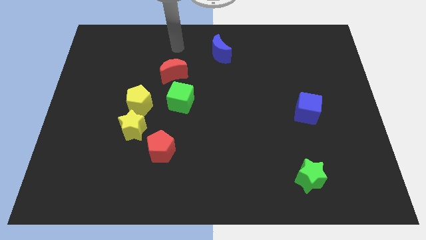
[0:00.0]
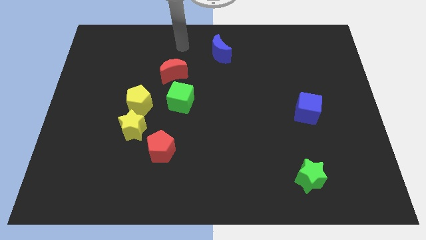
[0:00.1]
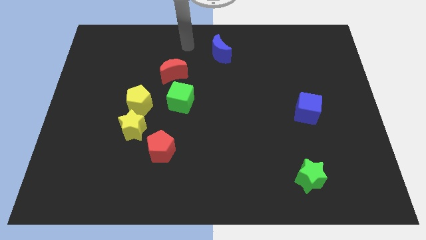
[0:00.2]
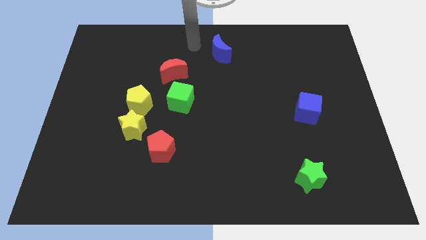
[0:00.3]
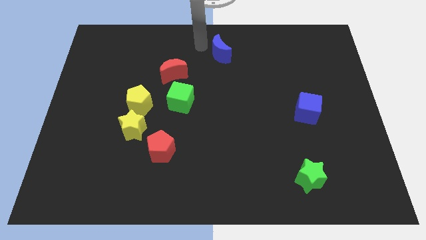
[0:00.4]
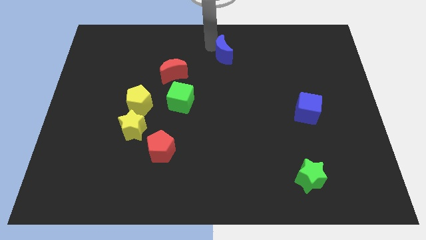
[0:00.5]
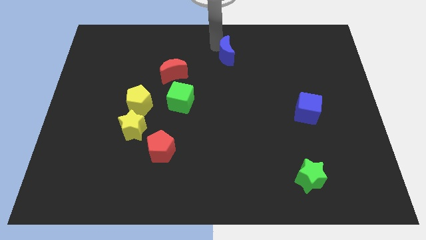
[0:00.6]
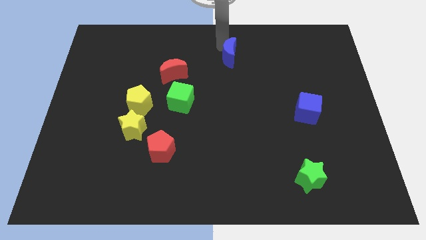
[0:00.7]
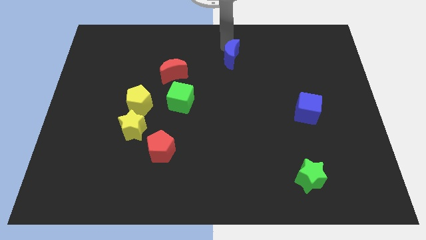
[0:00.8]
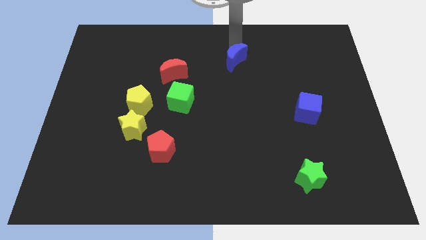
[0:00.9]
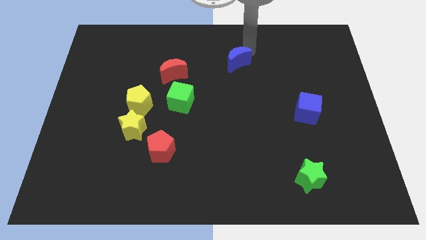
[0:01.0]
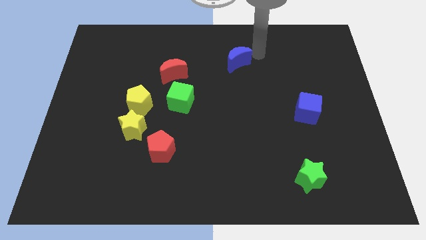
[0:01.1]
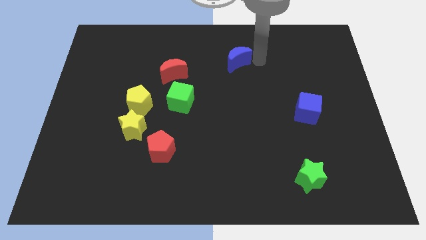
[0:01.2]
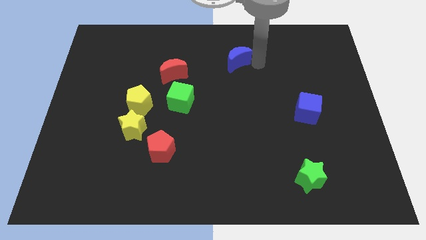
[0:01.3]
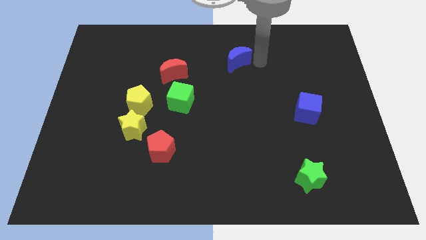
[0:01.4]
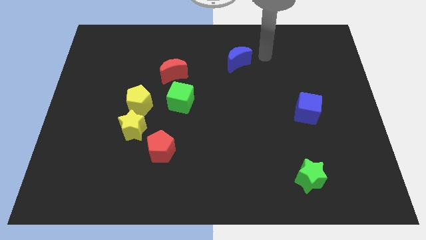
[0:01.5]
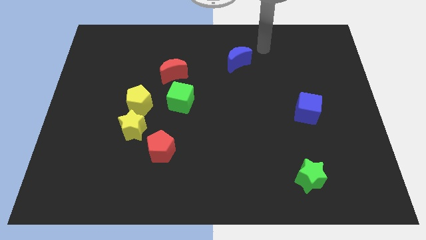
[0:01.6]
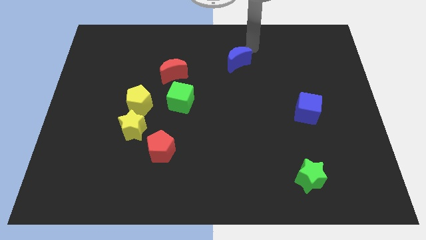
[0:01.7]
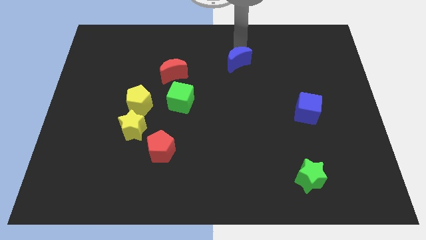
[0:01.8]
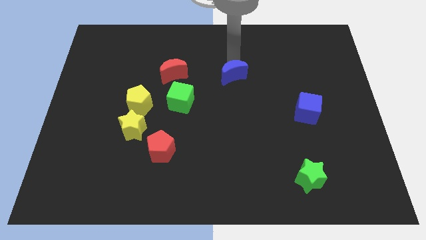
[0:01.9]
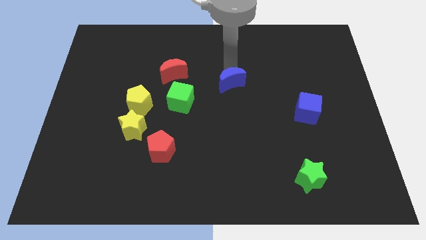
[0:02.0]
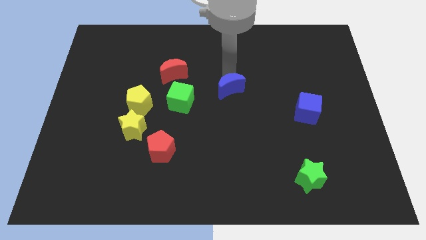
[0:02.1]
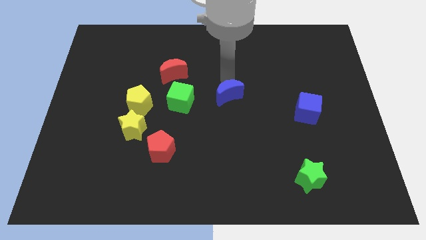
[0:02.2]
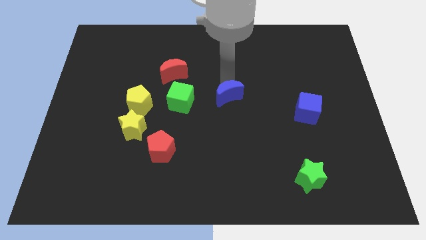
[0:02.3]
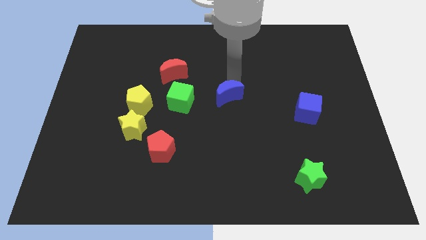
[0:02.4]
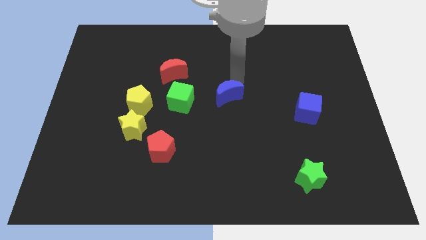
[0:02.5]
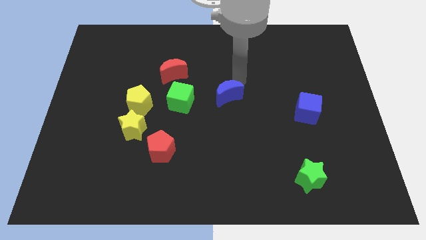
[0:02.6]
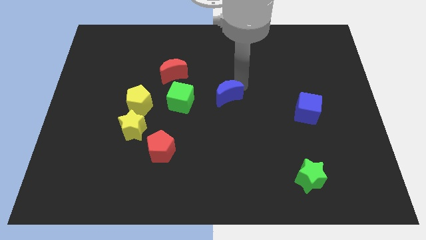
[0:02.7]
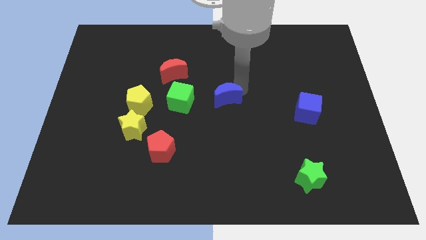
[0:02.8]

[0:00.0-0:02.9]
push the blue moon to the right side of the green cube

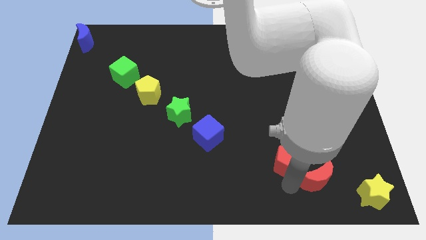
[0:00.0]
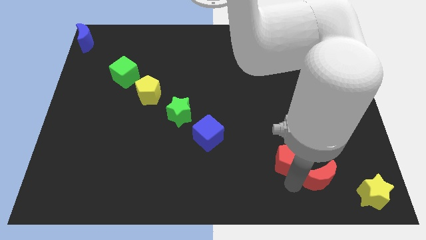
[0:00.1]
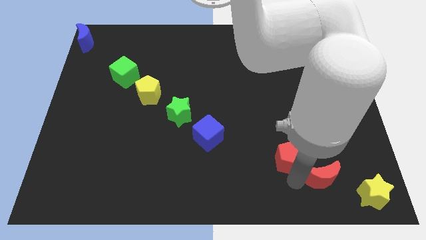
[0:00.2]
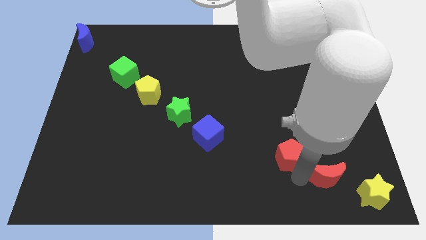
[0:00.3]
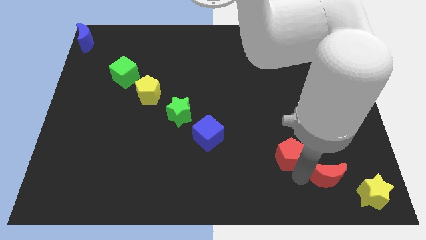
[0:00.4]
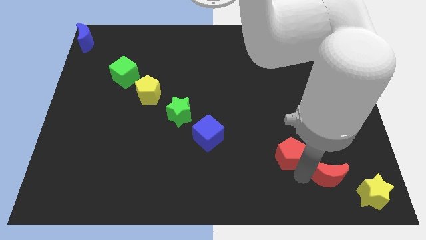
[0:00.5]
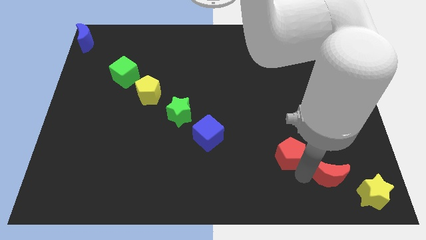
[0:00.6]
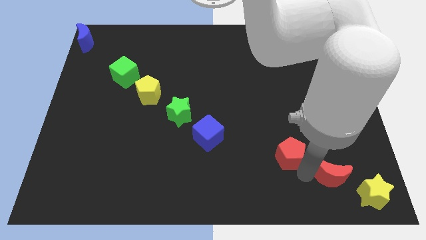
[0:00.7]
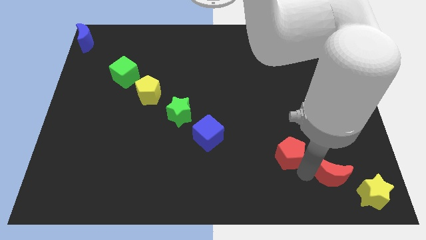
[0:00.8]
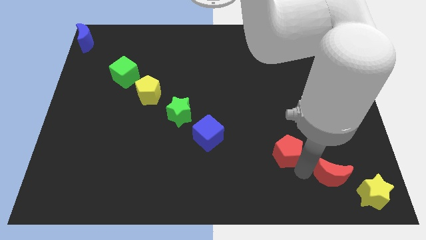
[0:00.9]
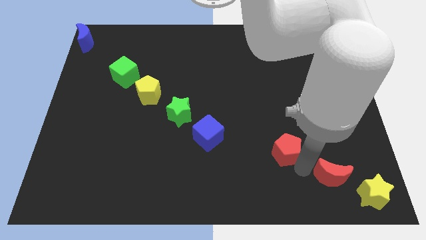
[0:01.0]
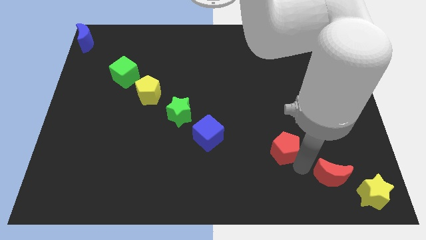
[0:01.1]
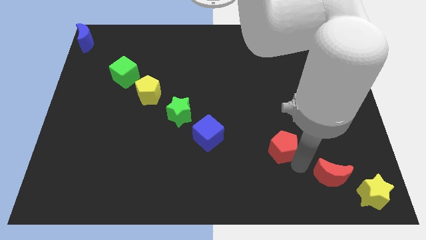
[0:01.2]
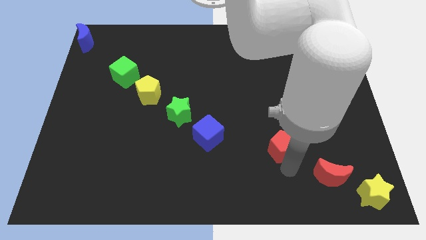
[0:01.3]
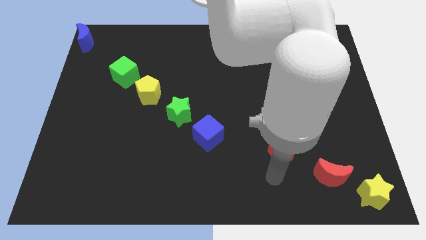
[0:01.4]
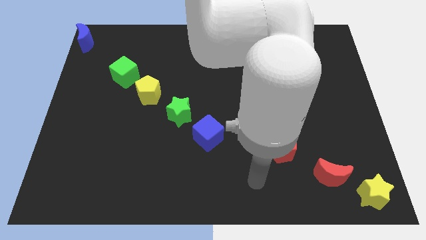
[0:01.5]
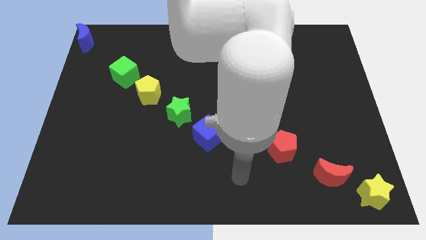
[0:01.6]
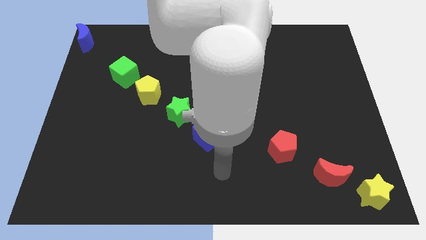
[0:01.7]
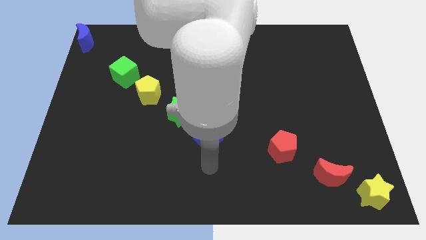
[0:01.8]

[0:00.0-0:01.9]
separate the red penatgon and the red moon

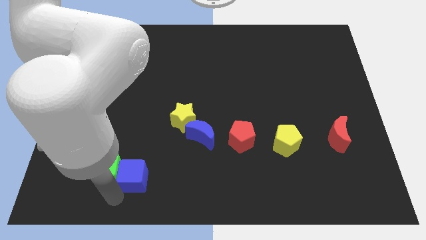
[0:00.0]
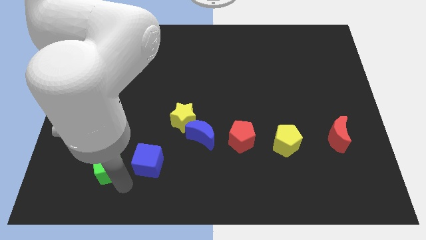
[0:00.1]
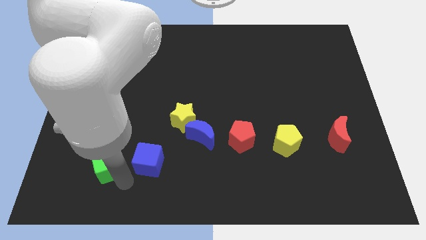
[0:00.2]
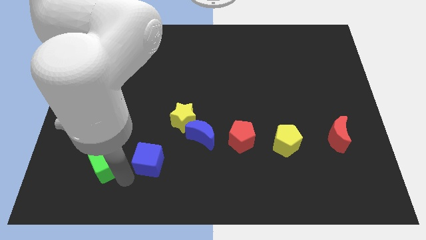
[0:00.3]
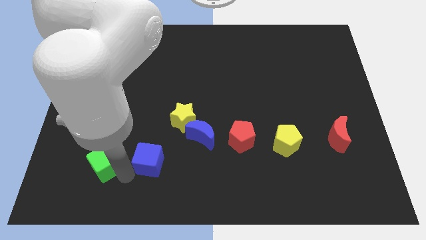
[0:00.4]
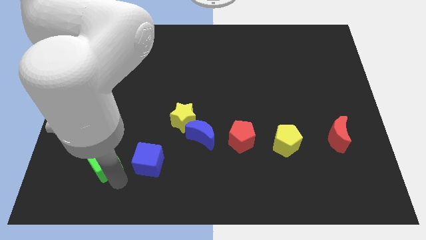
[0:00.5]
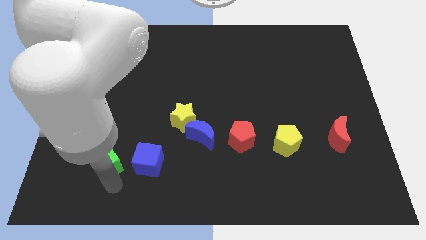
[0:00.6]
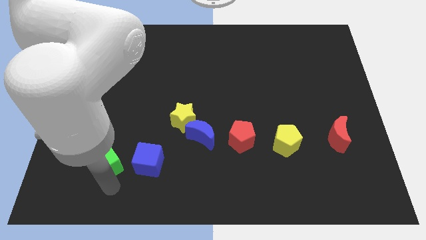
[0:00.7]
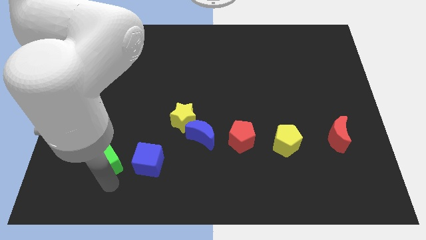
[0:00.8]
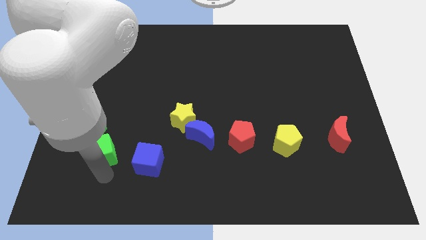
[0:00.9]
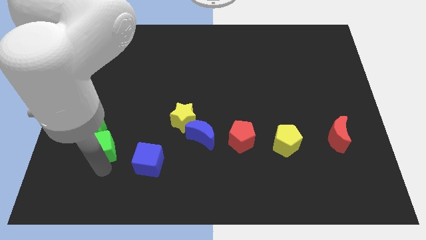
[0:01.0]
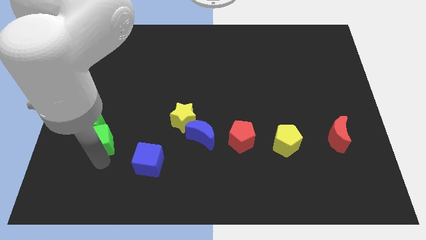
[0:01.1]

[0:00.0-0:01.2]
separate blue cube and green cube from each other

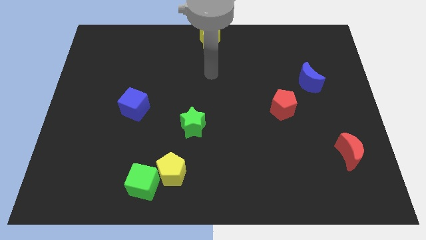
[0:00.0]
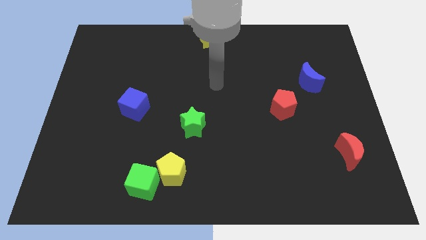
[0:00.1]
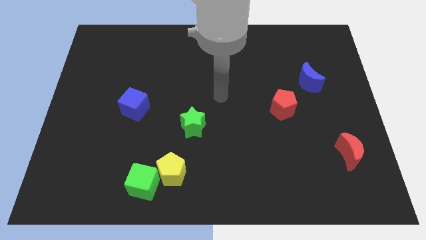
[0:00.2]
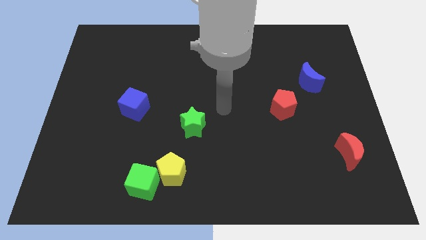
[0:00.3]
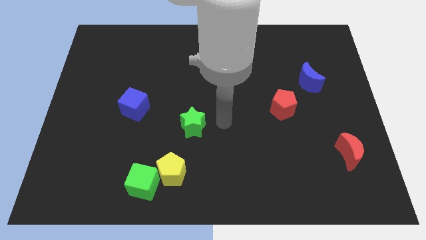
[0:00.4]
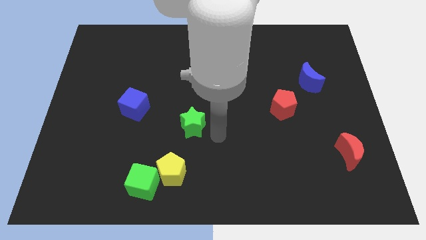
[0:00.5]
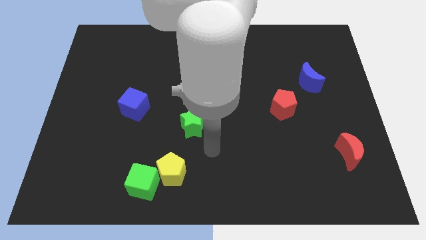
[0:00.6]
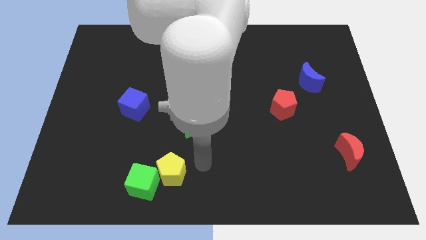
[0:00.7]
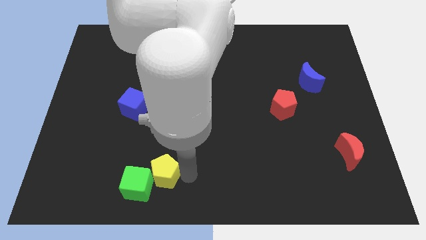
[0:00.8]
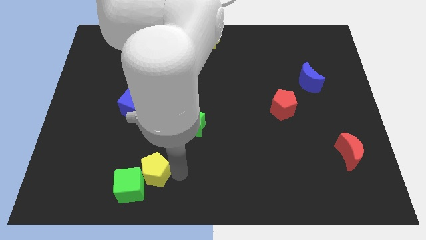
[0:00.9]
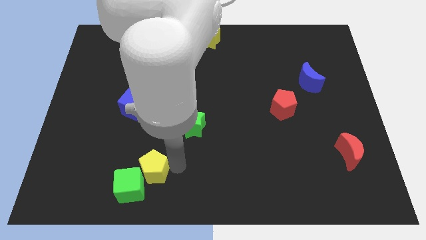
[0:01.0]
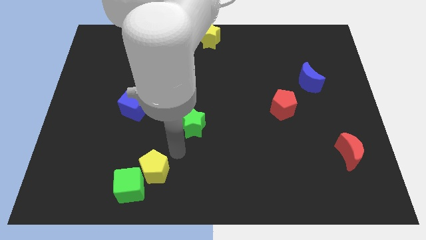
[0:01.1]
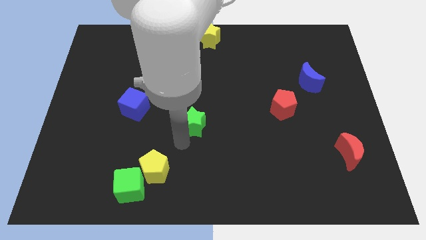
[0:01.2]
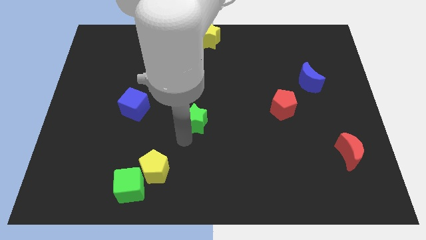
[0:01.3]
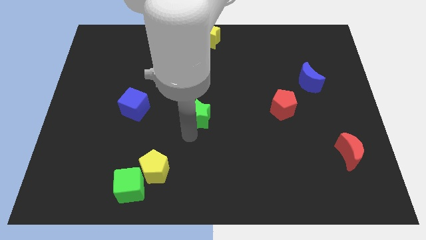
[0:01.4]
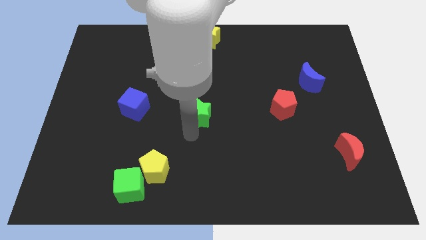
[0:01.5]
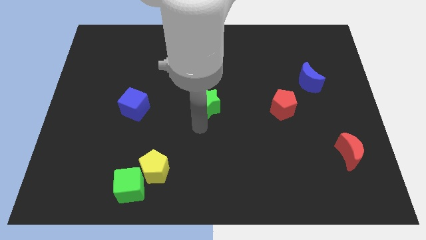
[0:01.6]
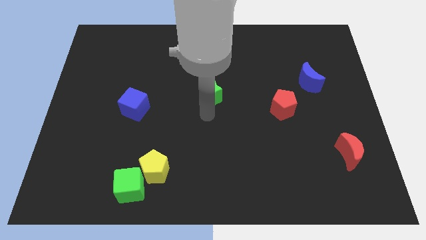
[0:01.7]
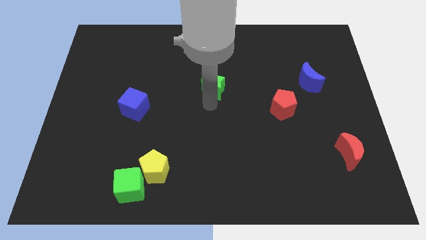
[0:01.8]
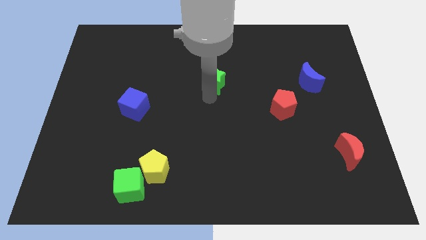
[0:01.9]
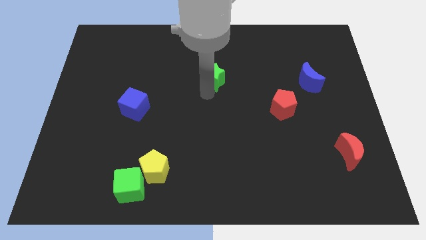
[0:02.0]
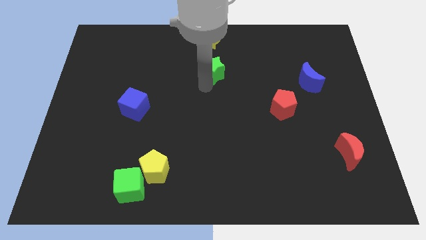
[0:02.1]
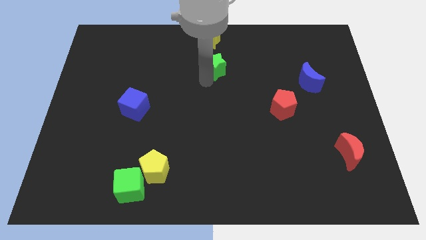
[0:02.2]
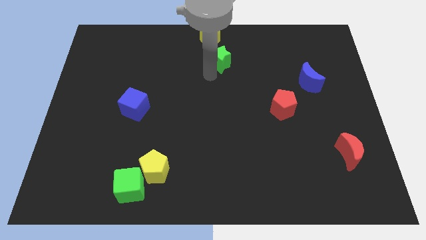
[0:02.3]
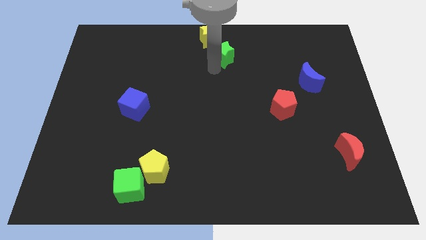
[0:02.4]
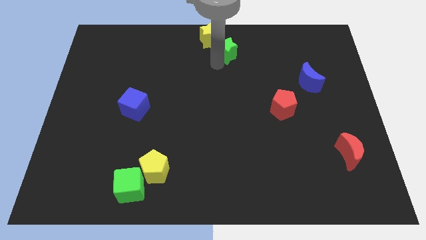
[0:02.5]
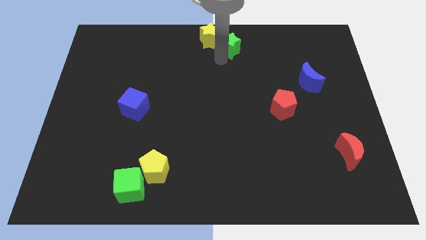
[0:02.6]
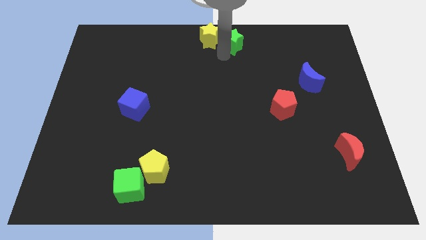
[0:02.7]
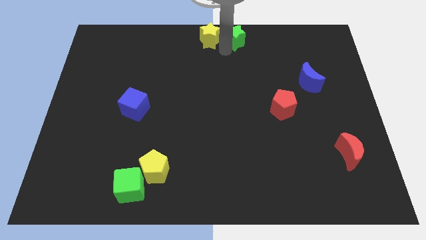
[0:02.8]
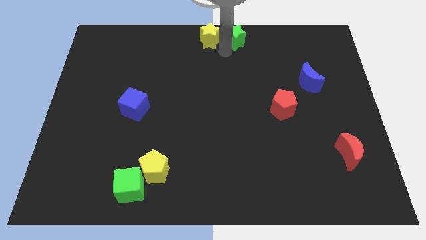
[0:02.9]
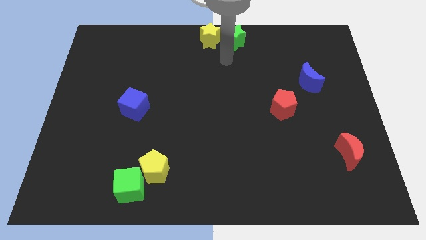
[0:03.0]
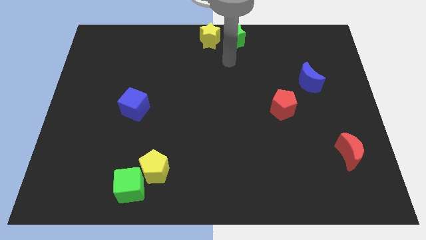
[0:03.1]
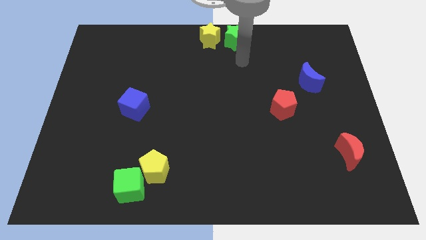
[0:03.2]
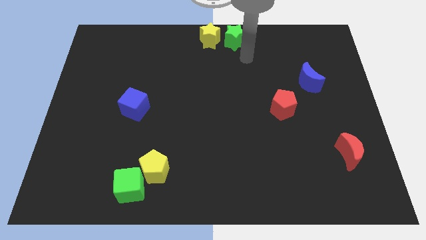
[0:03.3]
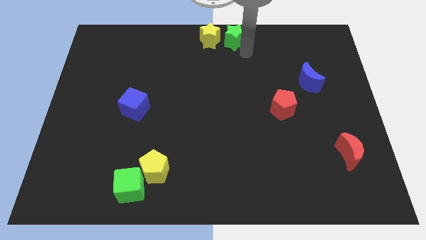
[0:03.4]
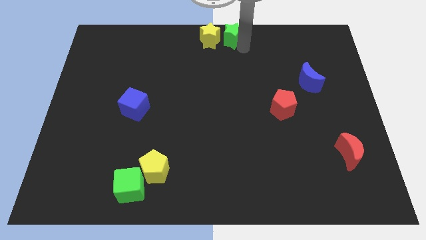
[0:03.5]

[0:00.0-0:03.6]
move the green star to the right side of the yellow star
